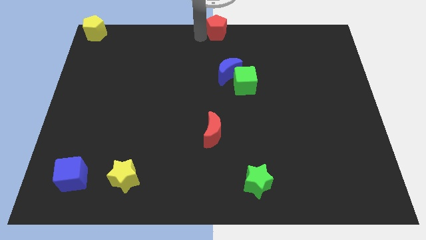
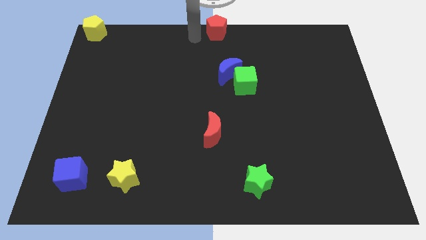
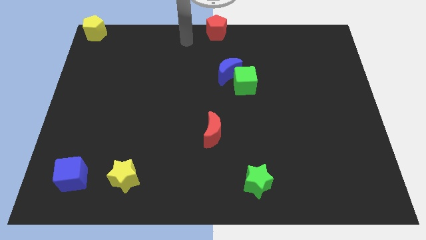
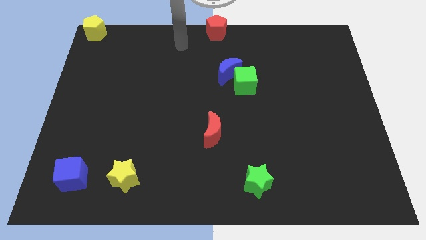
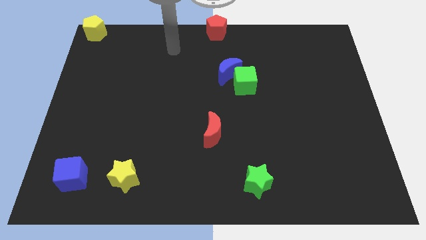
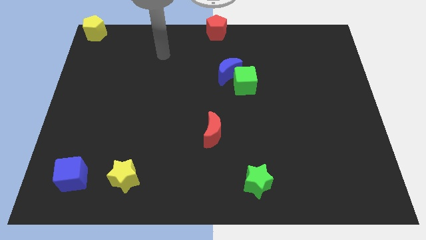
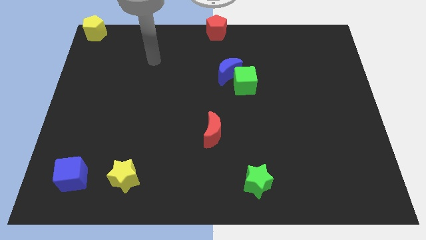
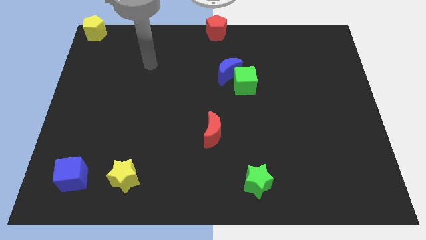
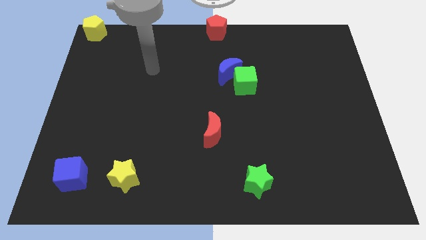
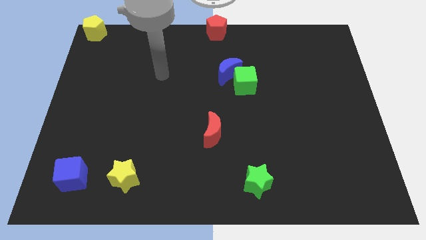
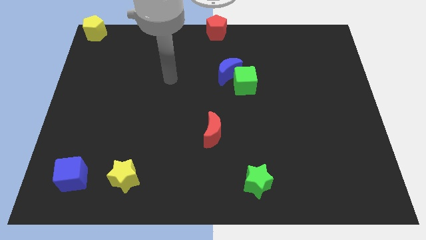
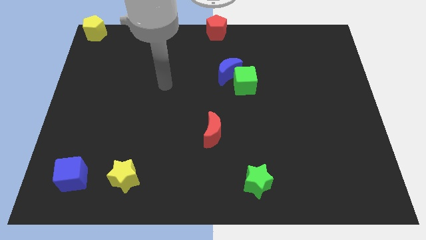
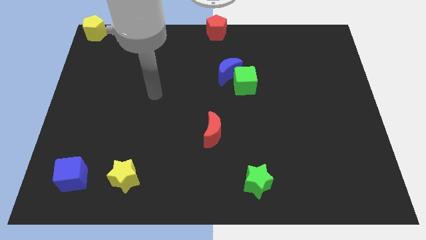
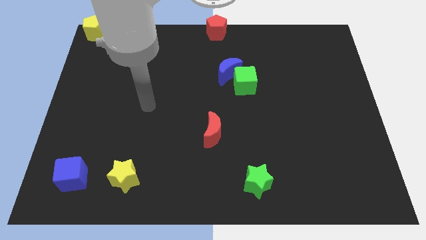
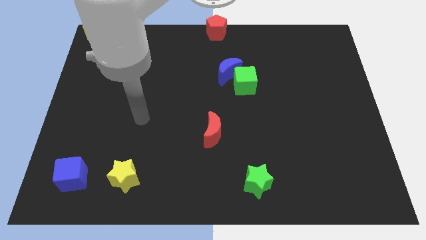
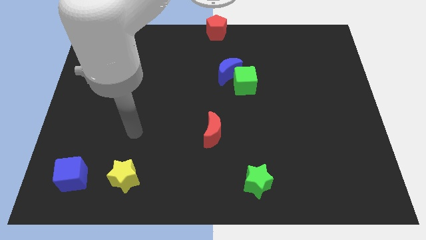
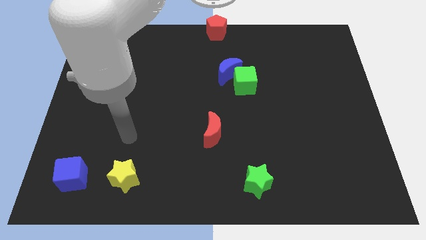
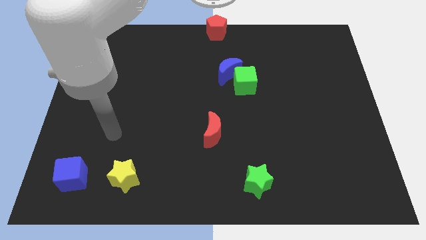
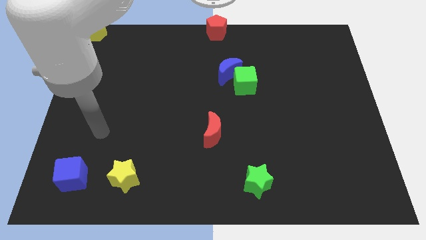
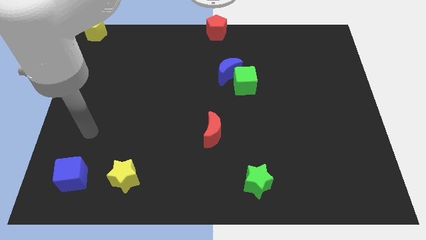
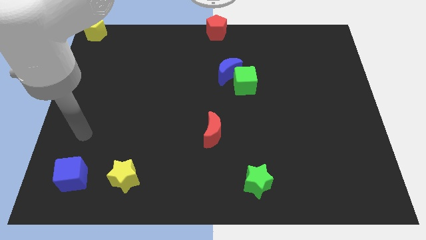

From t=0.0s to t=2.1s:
slide your arm away from red pentagon

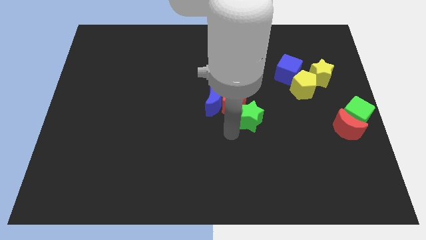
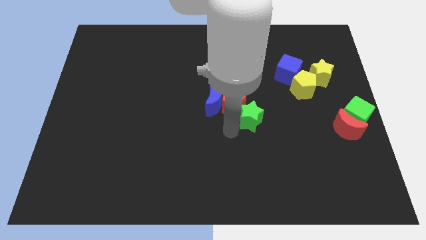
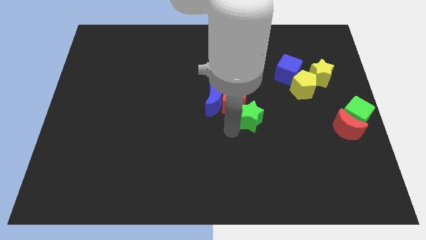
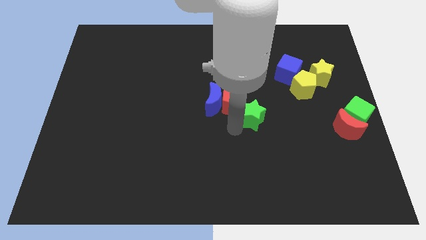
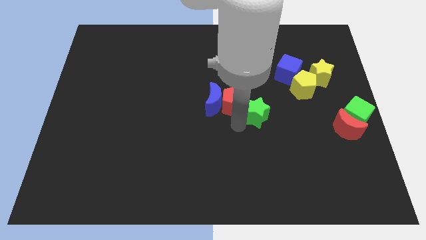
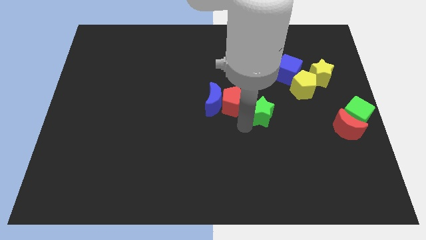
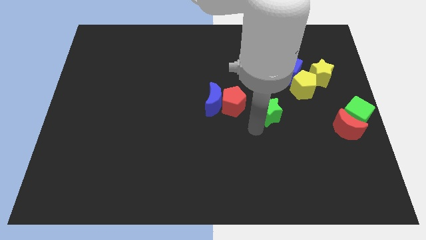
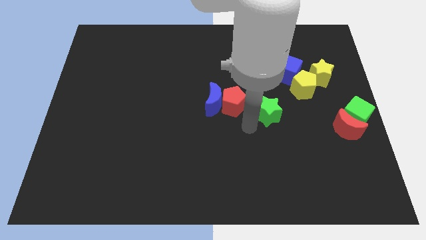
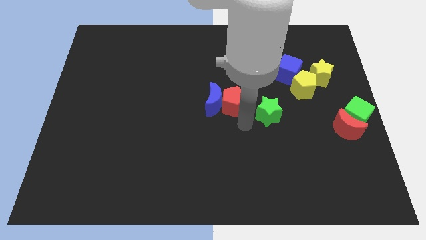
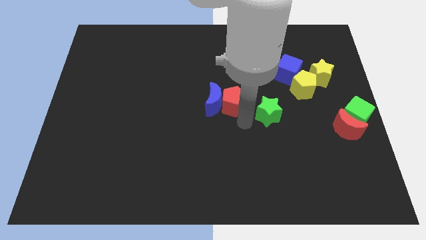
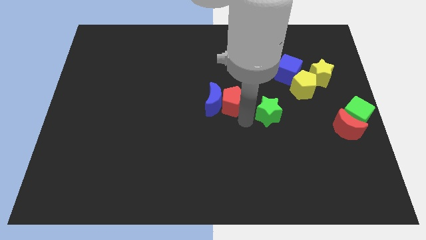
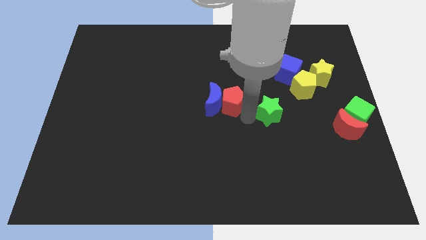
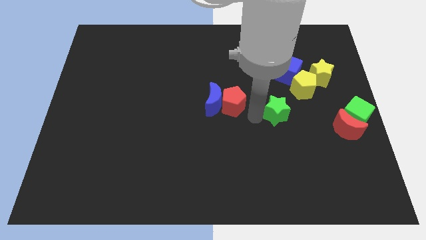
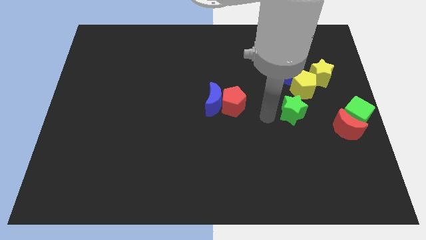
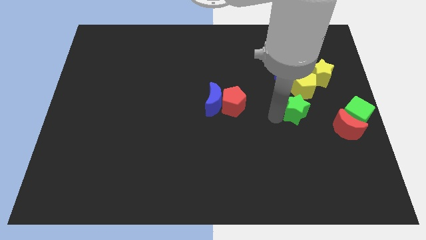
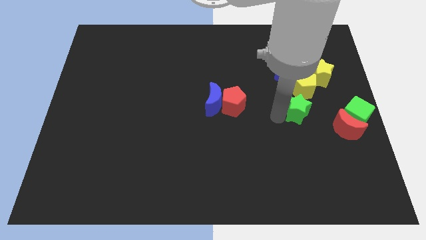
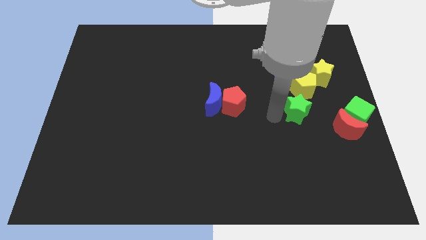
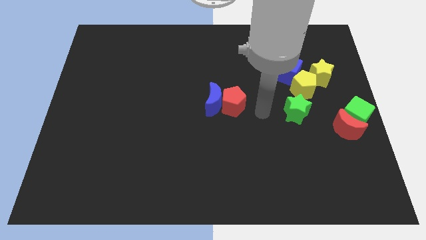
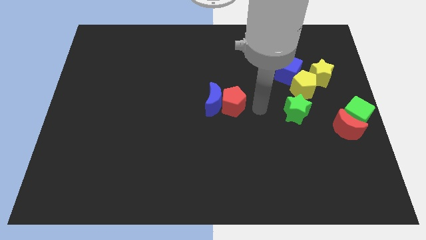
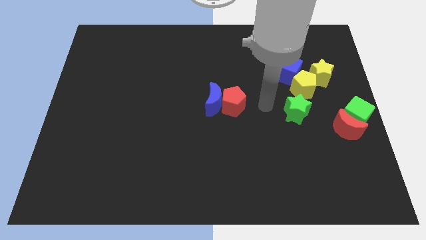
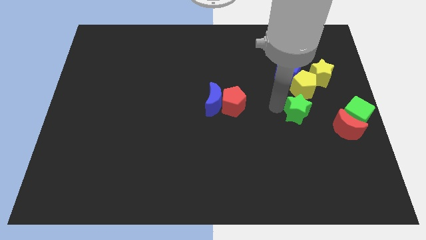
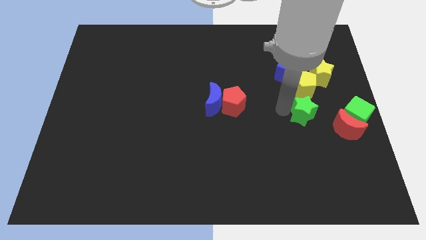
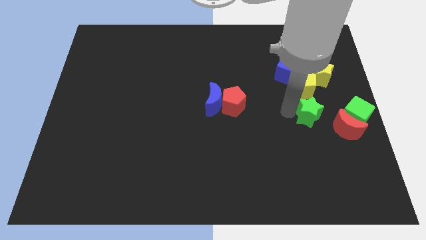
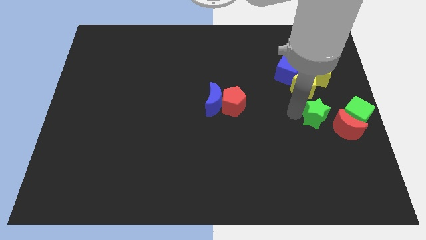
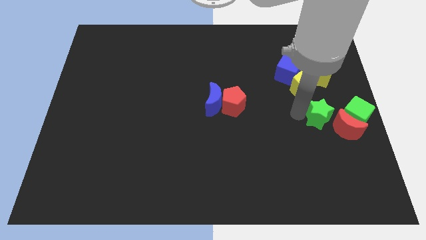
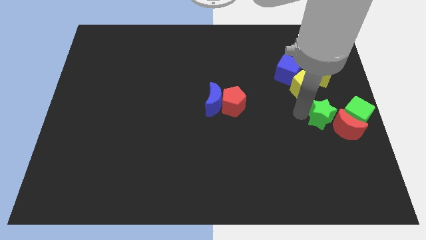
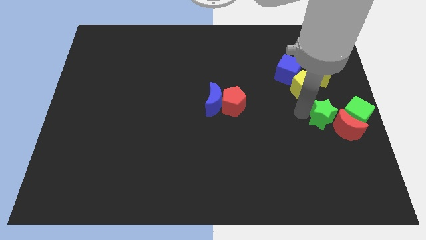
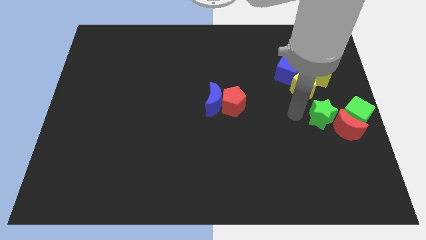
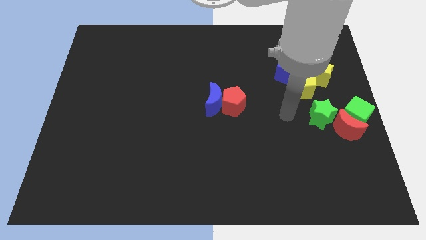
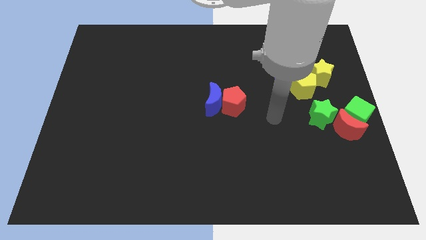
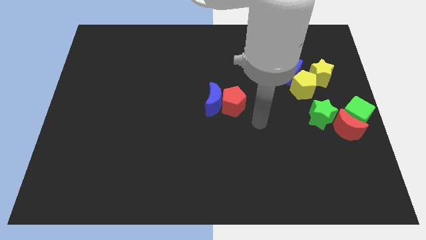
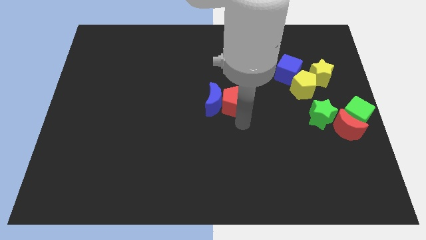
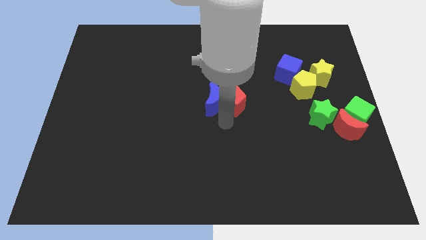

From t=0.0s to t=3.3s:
place green star towards the red crescent

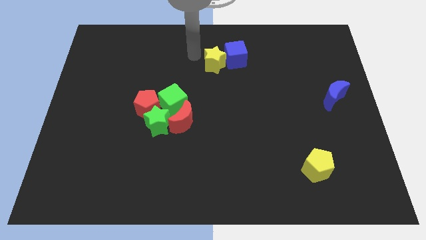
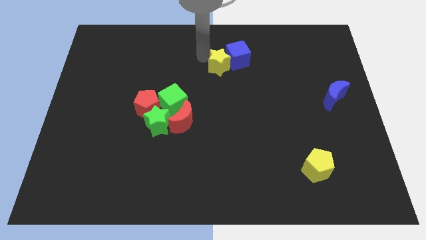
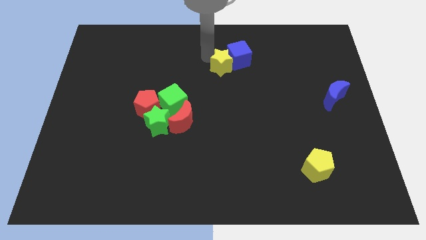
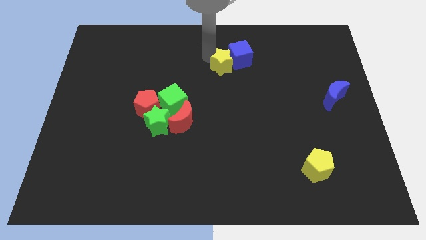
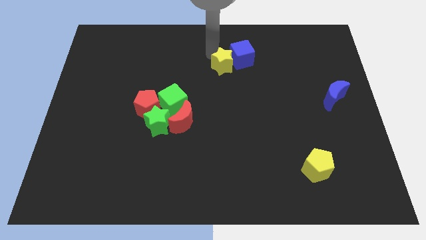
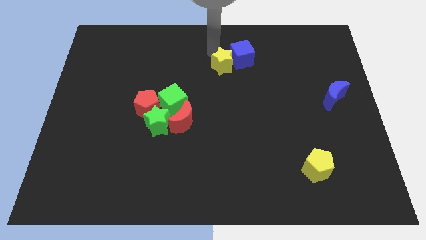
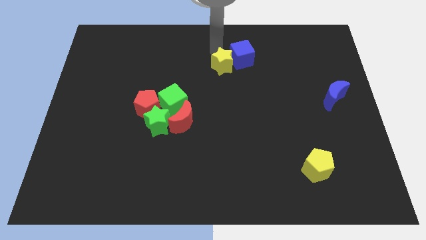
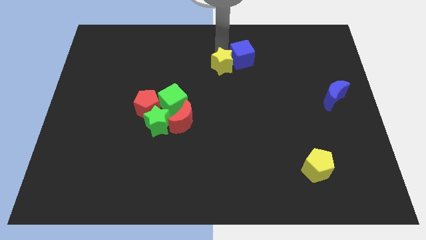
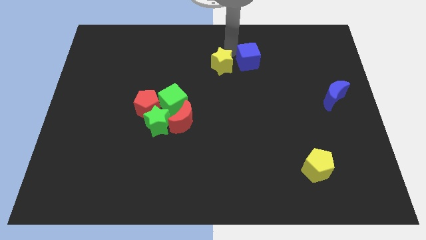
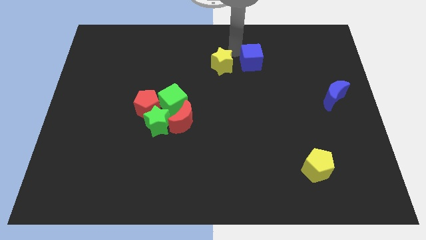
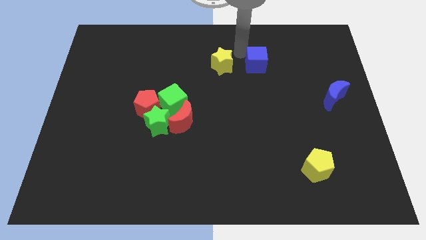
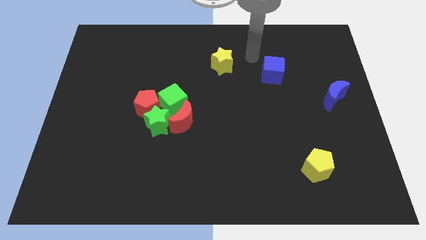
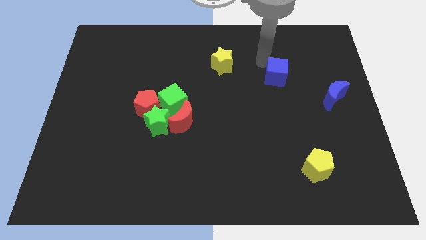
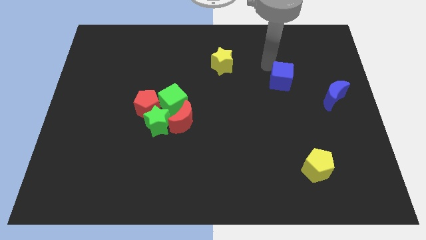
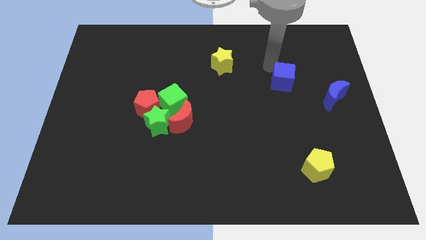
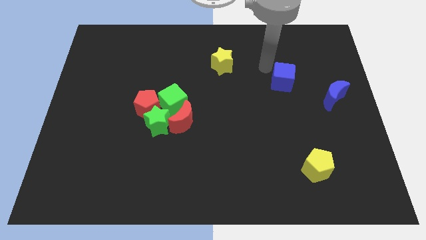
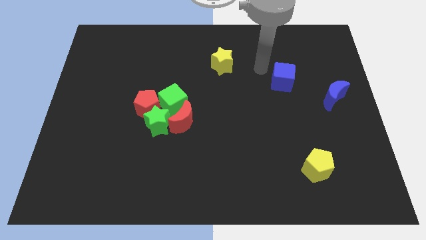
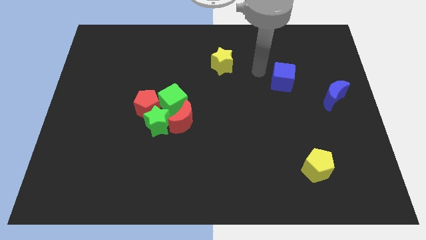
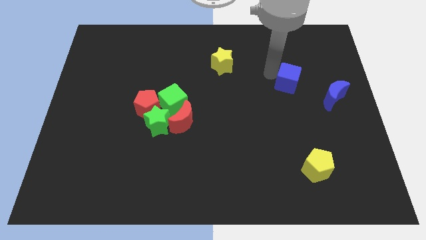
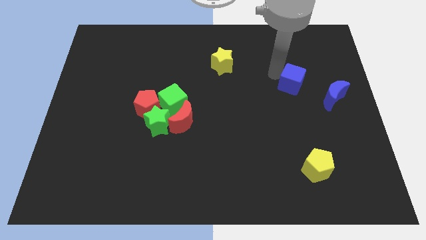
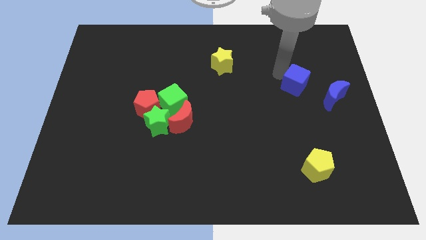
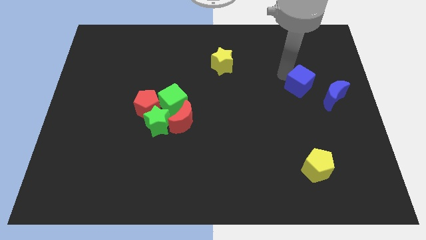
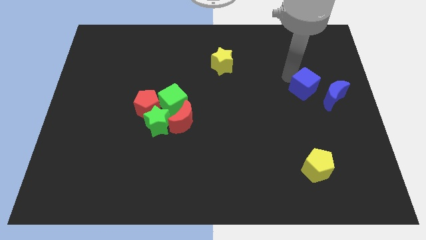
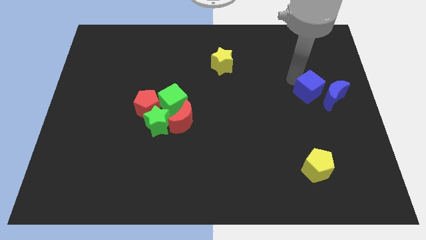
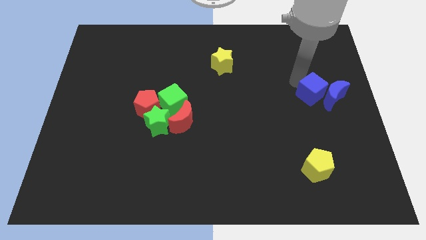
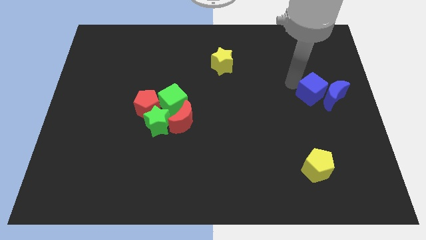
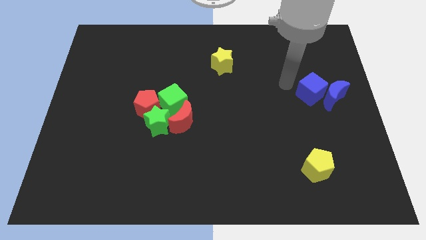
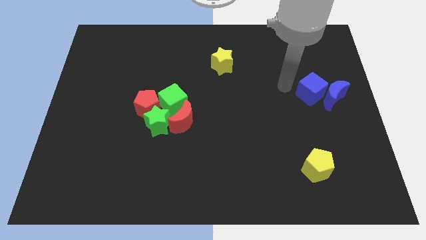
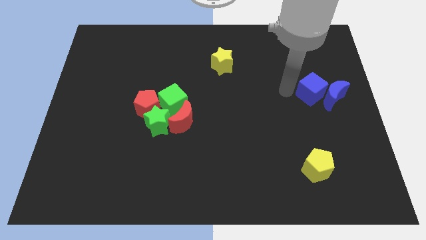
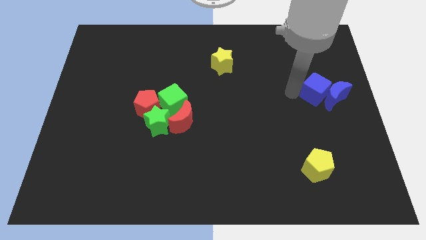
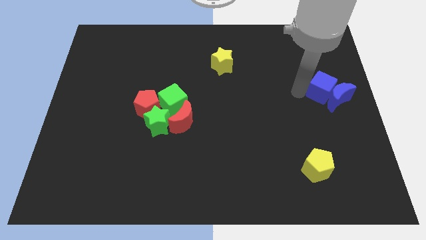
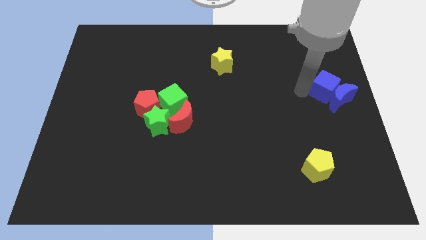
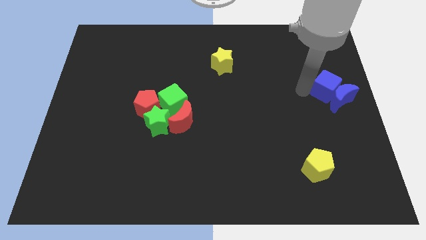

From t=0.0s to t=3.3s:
separate the blue cube from the yellow star

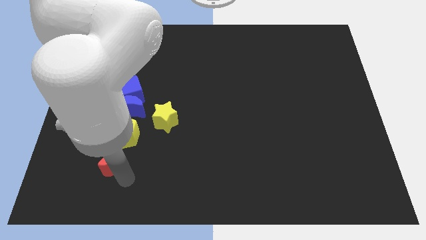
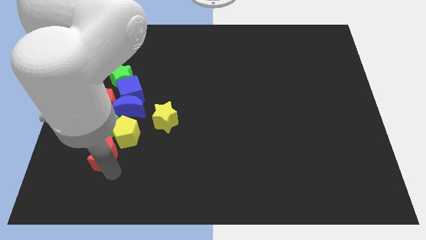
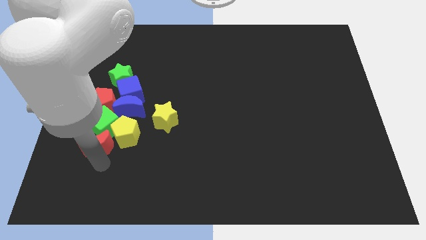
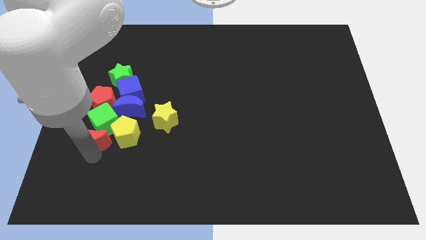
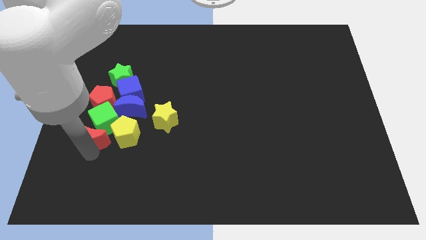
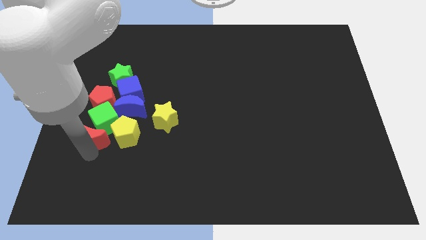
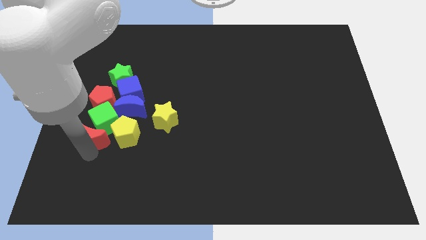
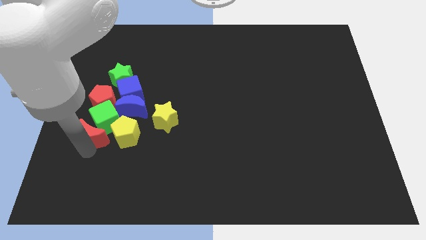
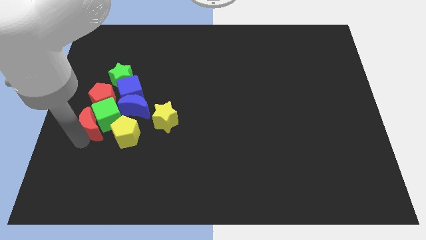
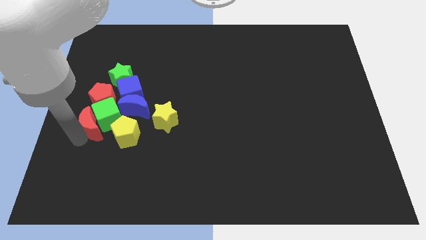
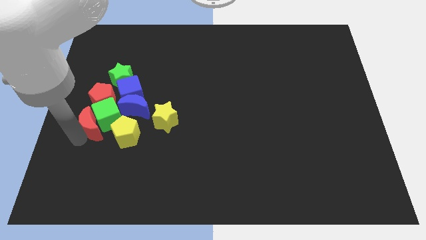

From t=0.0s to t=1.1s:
place red moon close to the left of the green cube
